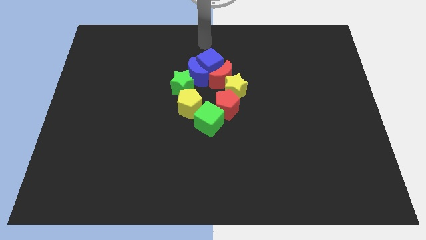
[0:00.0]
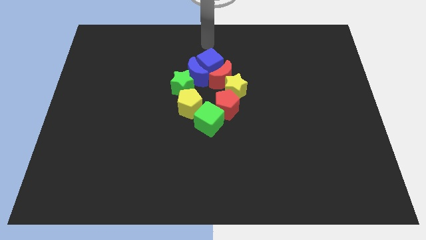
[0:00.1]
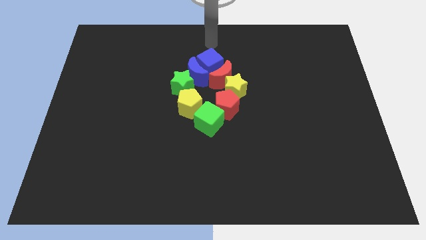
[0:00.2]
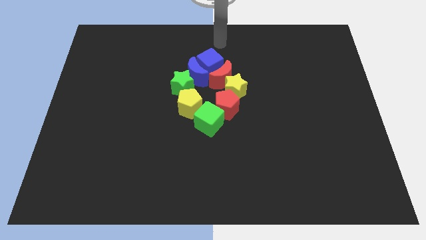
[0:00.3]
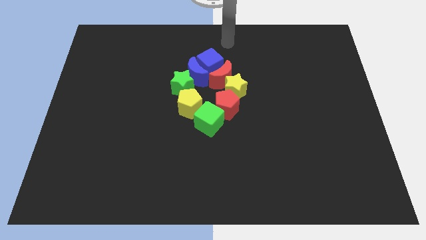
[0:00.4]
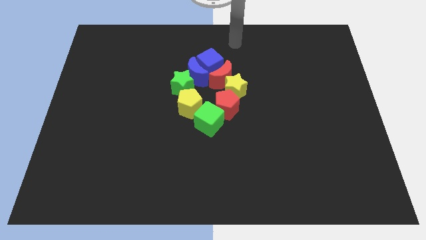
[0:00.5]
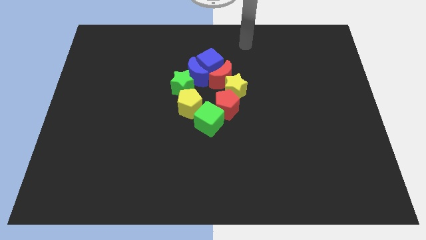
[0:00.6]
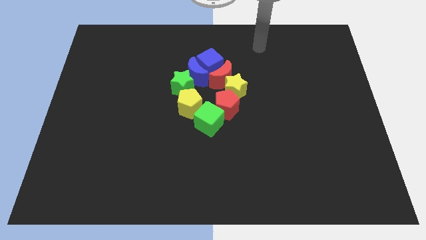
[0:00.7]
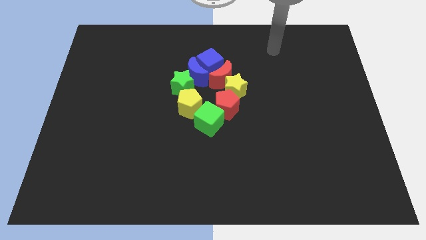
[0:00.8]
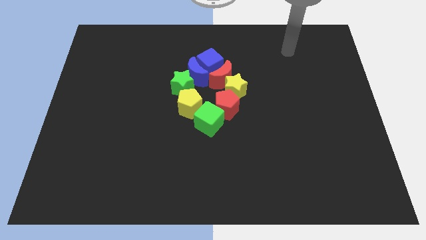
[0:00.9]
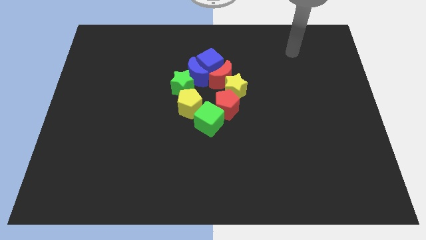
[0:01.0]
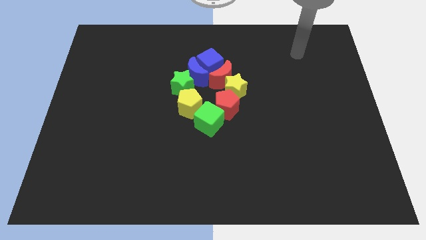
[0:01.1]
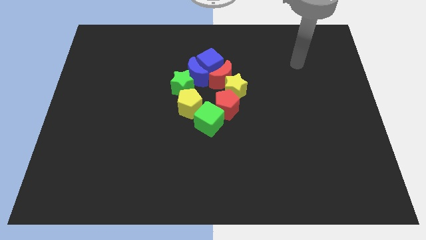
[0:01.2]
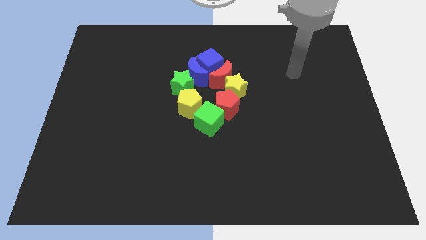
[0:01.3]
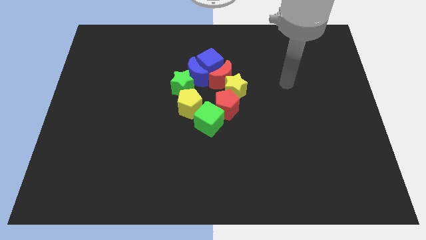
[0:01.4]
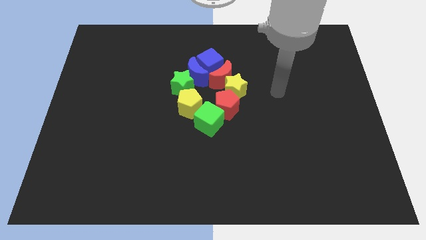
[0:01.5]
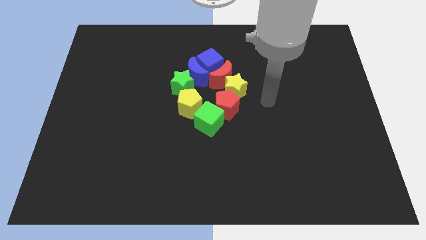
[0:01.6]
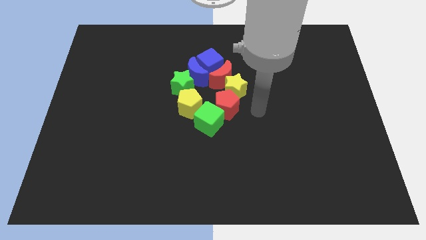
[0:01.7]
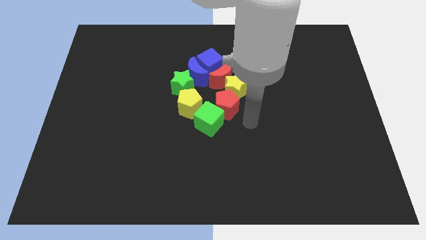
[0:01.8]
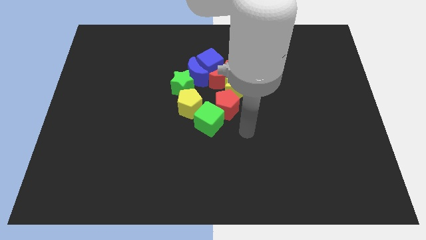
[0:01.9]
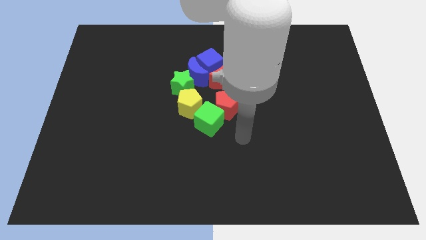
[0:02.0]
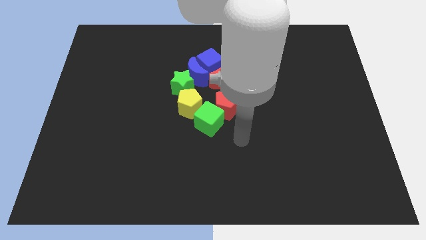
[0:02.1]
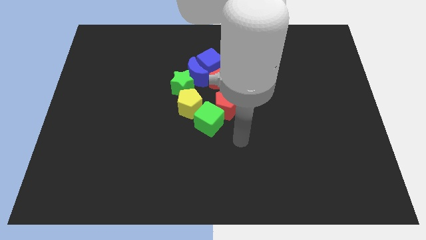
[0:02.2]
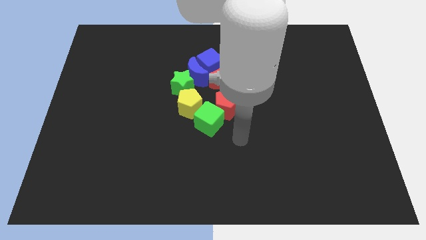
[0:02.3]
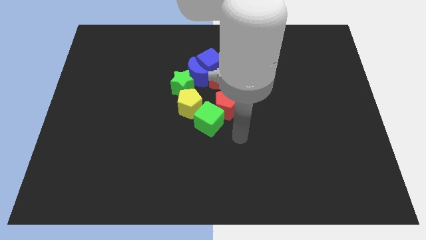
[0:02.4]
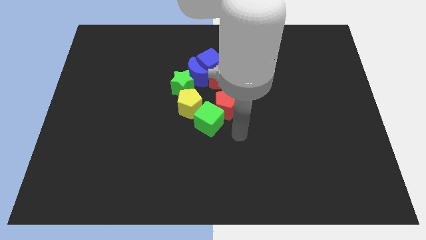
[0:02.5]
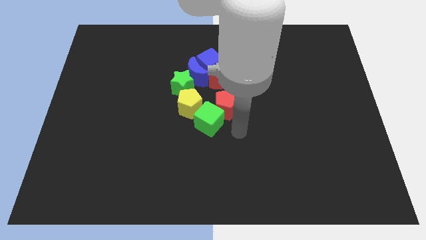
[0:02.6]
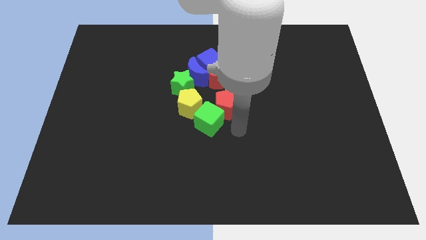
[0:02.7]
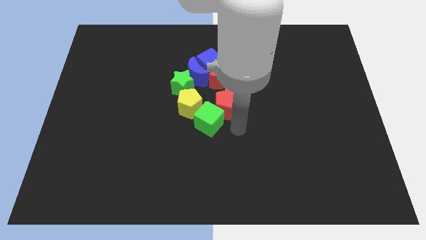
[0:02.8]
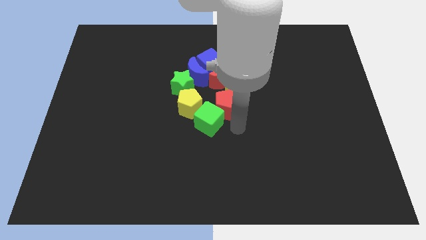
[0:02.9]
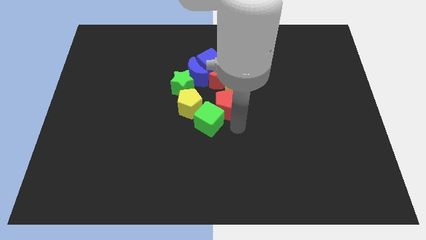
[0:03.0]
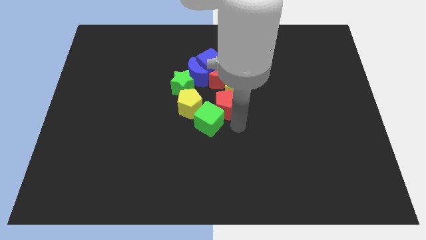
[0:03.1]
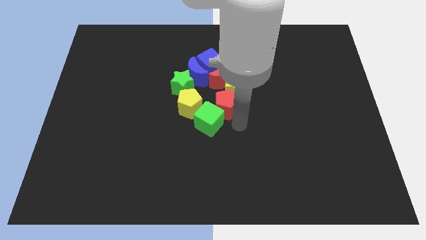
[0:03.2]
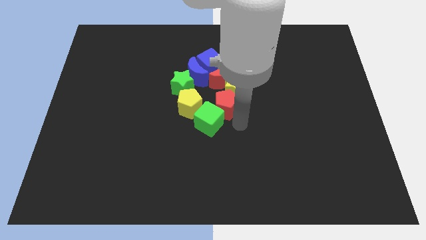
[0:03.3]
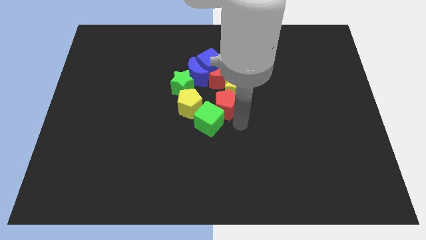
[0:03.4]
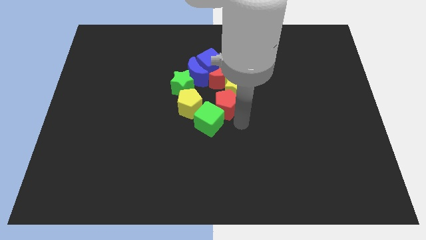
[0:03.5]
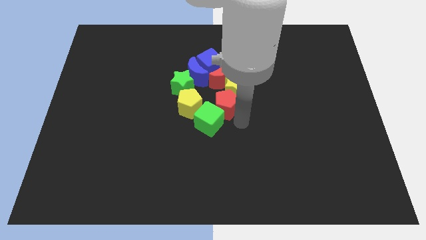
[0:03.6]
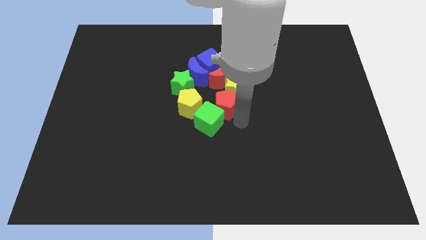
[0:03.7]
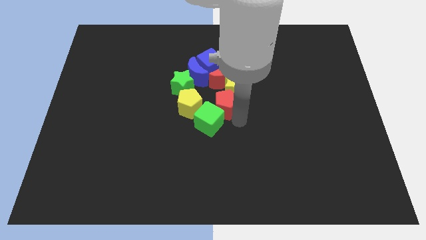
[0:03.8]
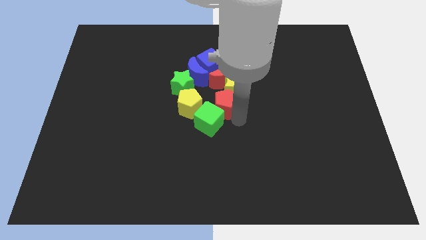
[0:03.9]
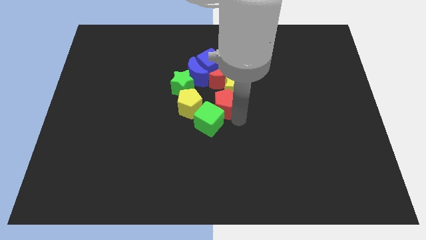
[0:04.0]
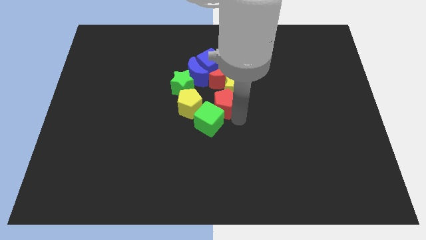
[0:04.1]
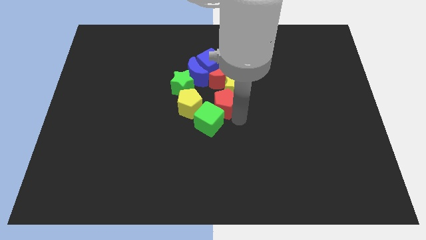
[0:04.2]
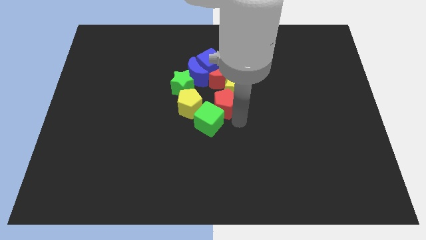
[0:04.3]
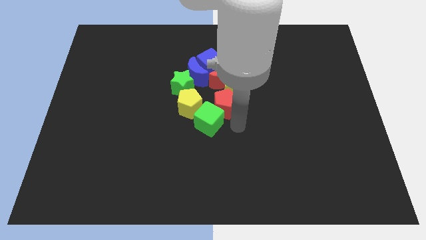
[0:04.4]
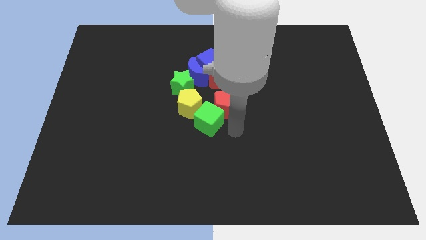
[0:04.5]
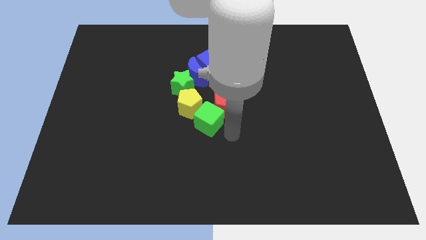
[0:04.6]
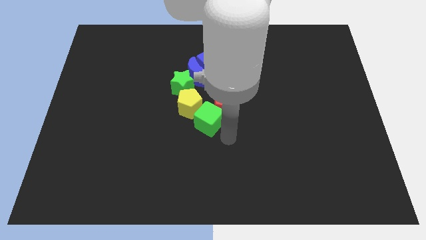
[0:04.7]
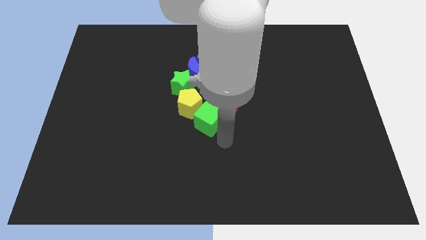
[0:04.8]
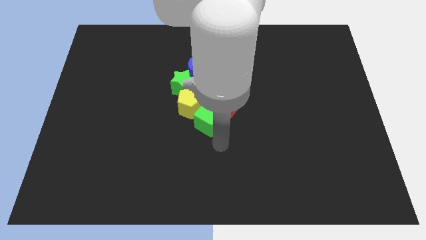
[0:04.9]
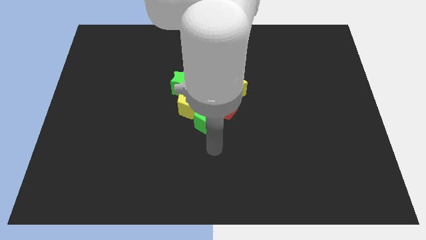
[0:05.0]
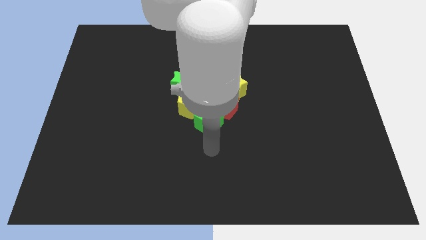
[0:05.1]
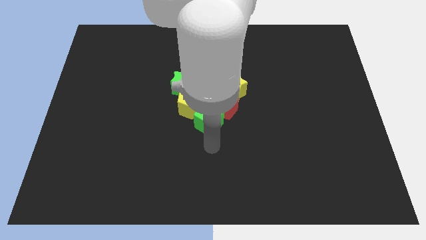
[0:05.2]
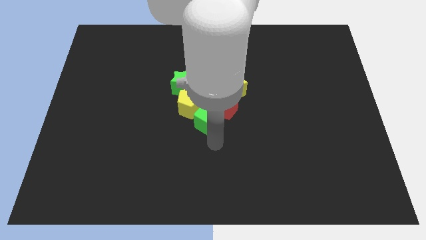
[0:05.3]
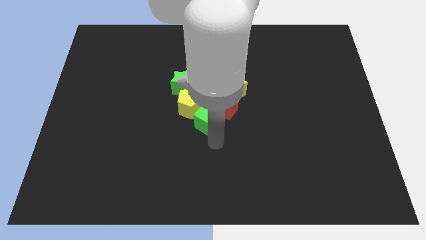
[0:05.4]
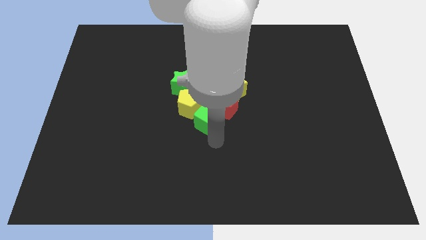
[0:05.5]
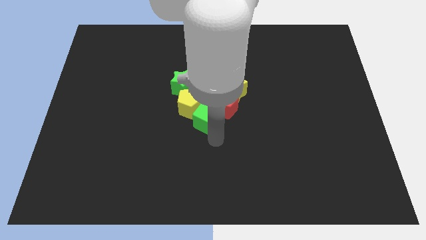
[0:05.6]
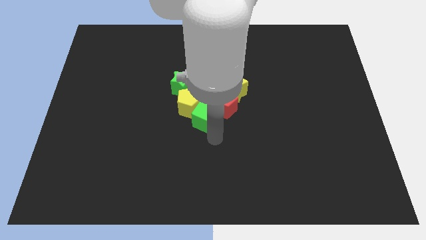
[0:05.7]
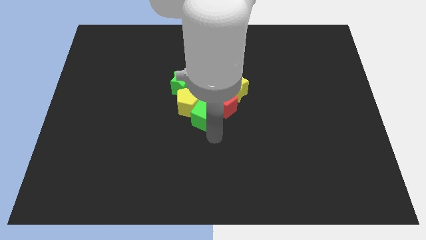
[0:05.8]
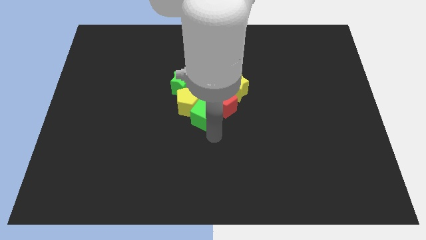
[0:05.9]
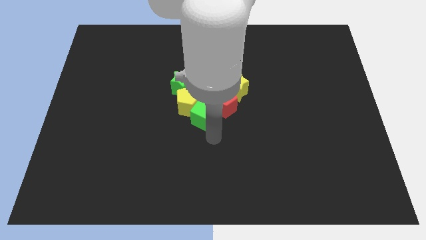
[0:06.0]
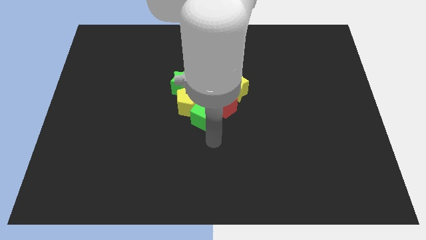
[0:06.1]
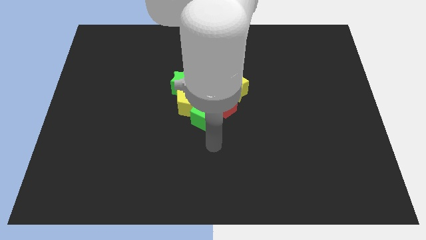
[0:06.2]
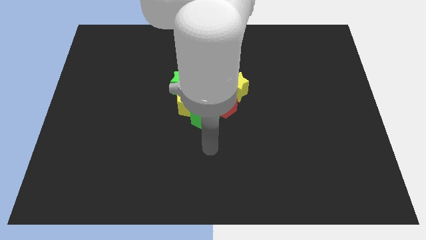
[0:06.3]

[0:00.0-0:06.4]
slightly push the green cube into a group of blocks

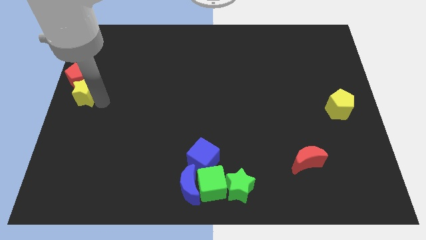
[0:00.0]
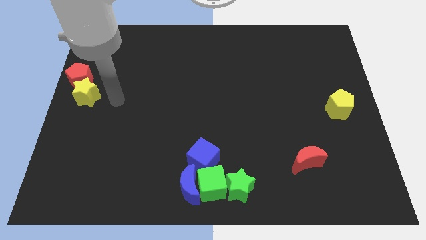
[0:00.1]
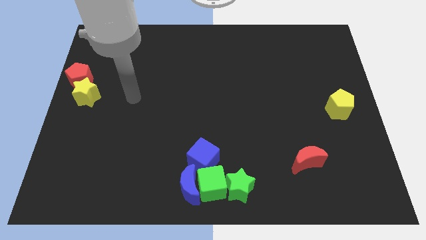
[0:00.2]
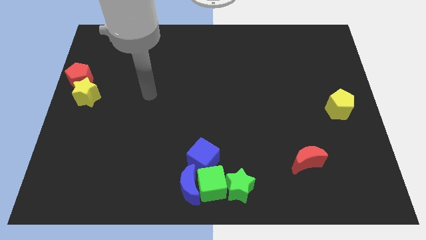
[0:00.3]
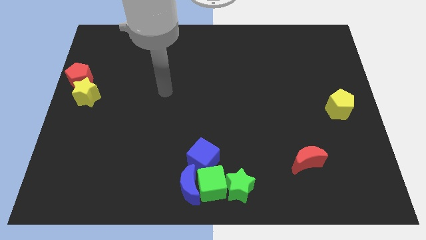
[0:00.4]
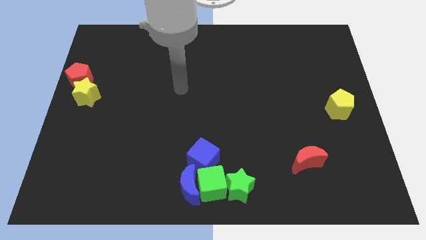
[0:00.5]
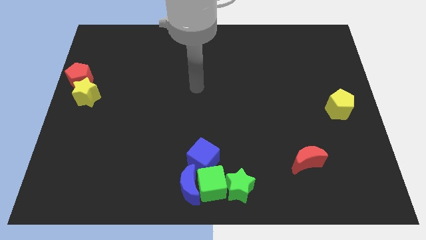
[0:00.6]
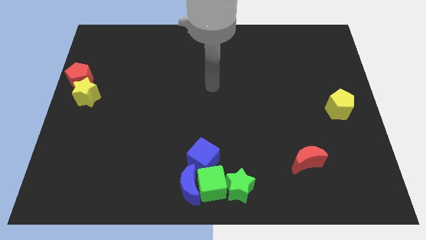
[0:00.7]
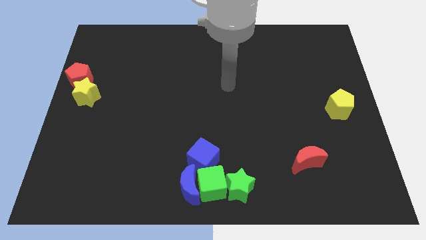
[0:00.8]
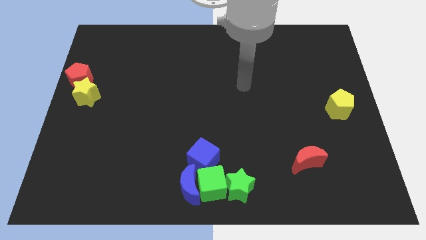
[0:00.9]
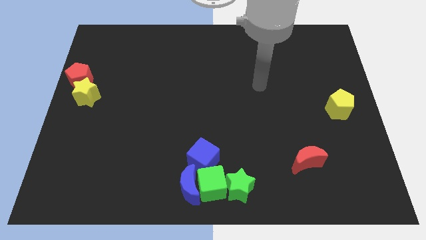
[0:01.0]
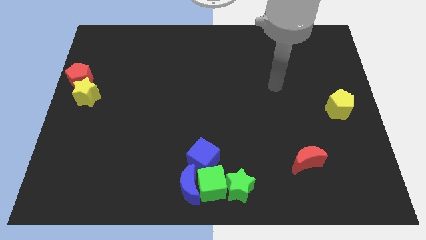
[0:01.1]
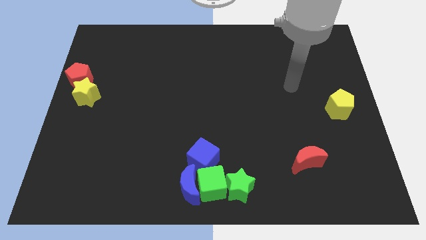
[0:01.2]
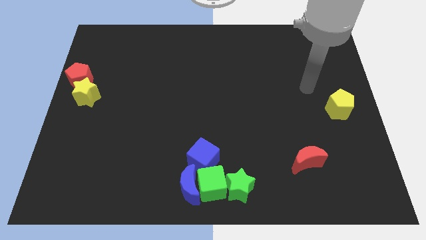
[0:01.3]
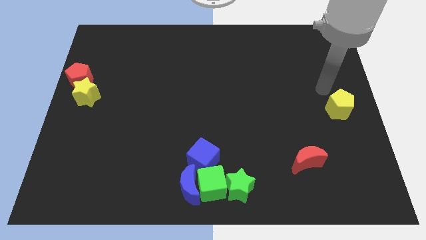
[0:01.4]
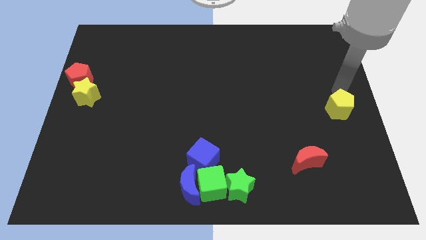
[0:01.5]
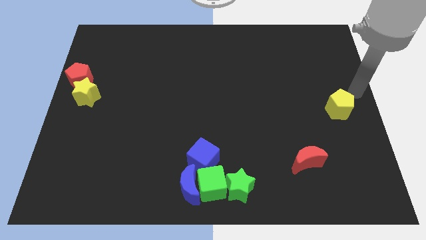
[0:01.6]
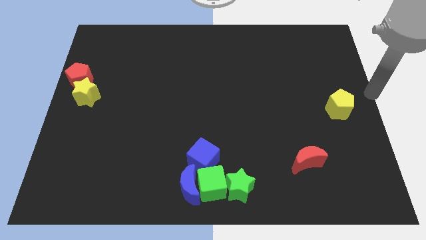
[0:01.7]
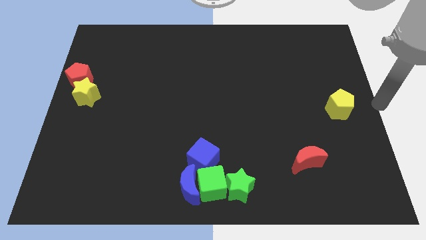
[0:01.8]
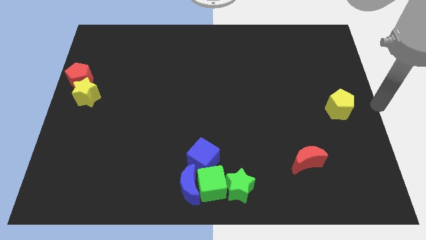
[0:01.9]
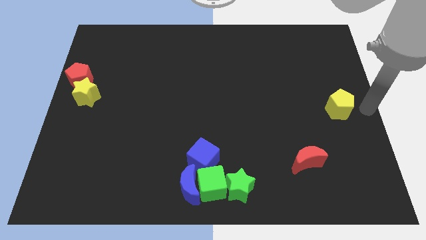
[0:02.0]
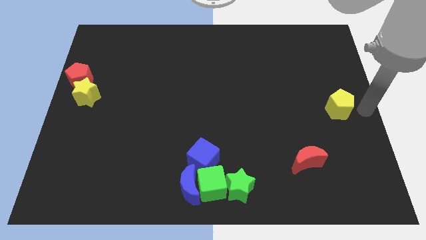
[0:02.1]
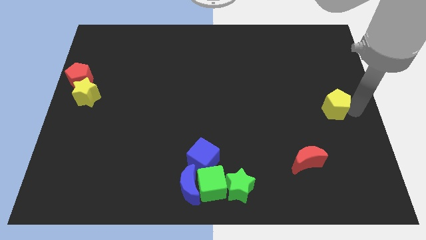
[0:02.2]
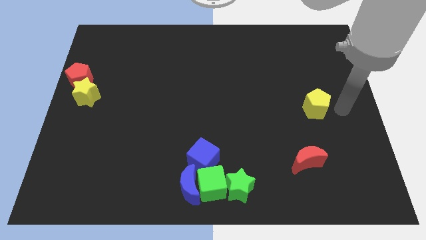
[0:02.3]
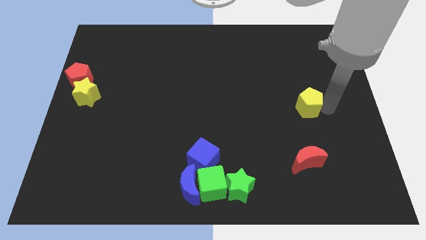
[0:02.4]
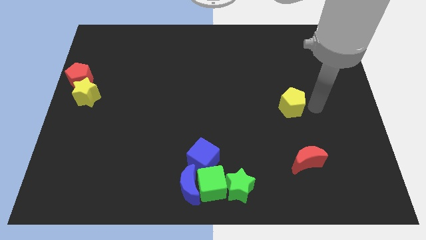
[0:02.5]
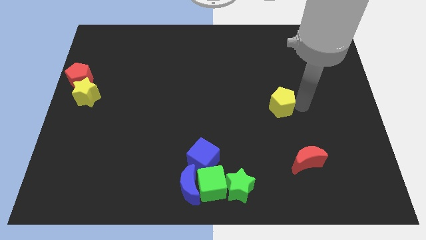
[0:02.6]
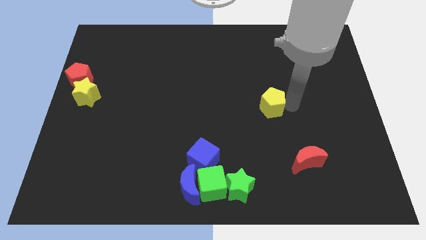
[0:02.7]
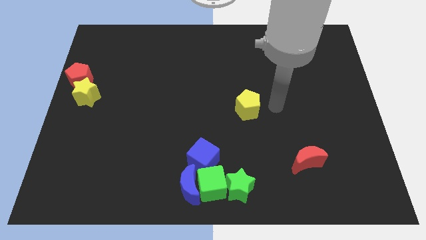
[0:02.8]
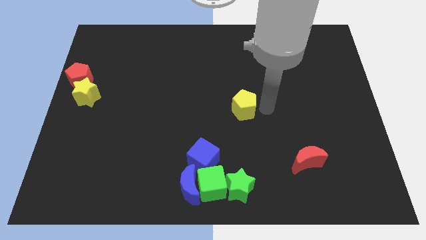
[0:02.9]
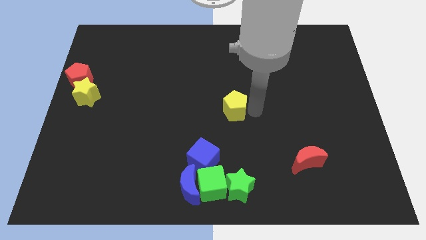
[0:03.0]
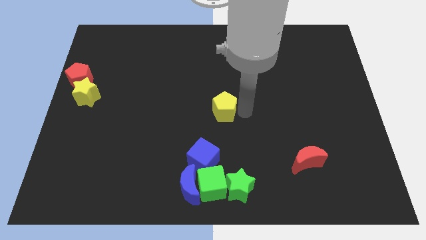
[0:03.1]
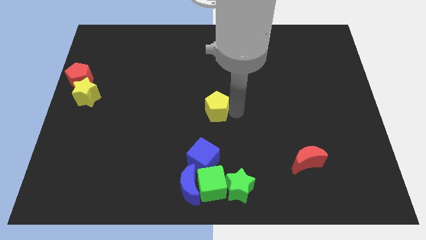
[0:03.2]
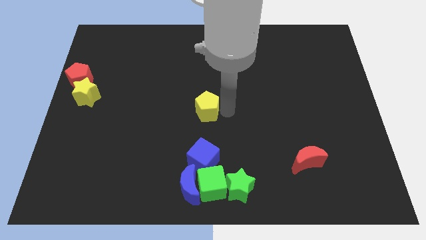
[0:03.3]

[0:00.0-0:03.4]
move the yellow pentagon to the top side of the blue cube
